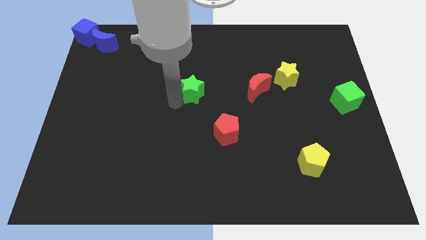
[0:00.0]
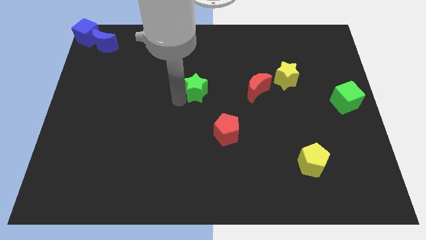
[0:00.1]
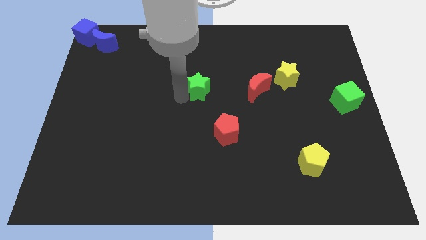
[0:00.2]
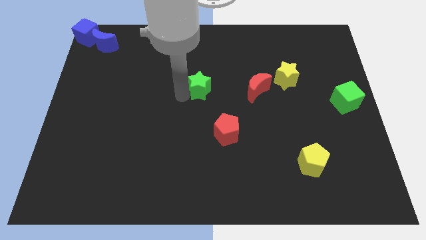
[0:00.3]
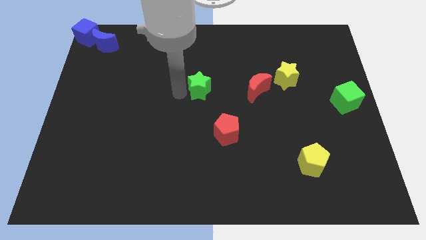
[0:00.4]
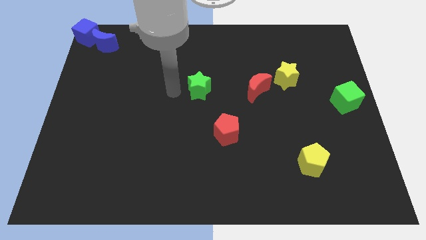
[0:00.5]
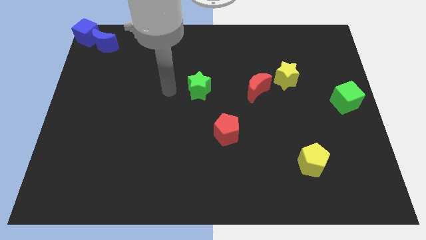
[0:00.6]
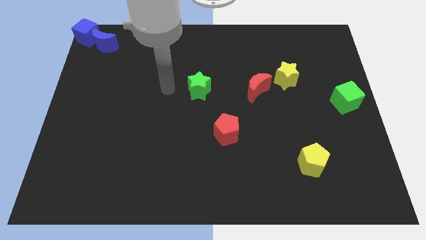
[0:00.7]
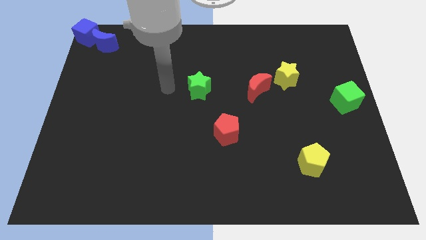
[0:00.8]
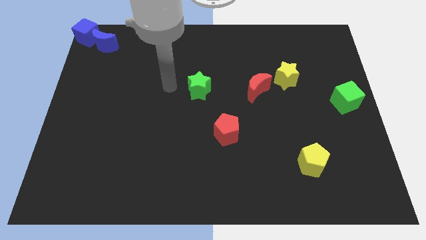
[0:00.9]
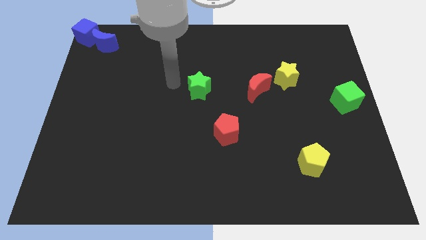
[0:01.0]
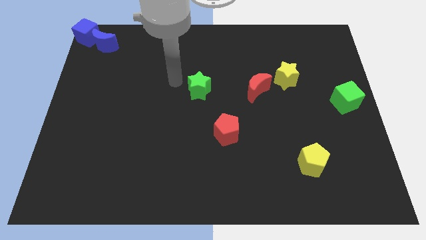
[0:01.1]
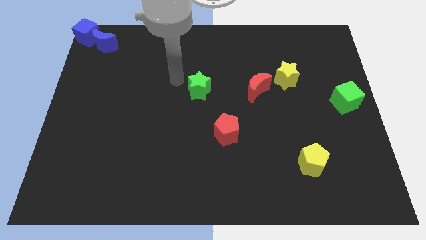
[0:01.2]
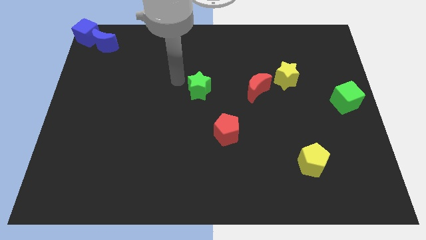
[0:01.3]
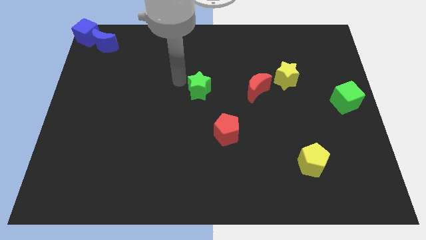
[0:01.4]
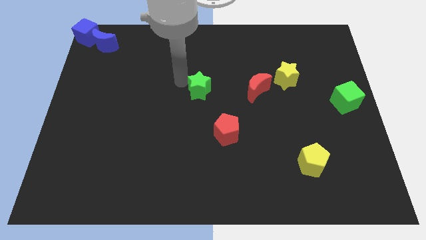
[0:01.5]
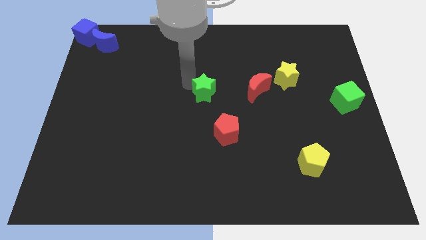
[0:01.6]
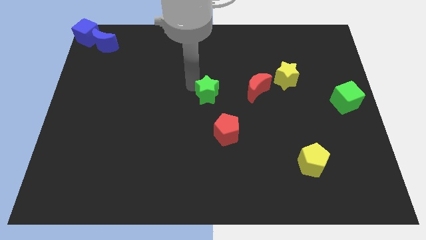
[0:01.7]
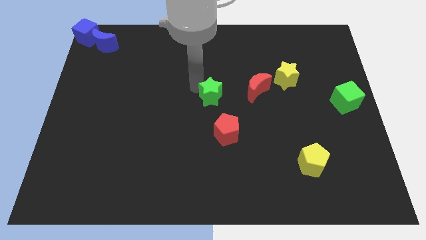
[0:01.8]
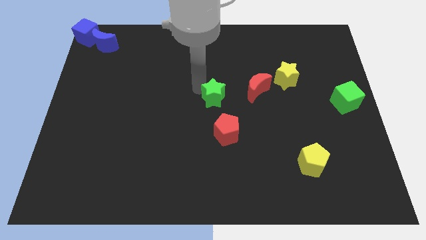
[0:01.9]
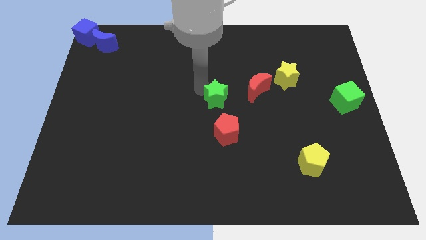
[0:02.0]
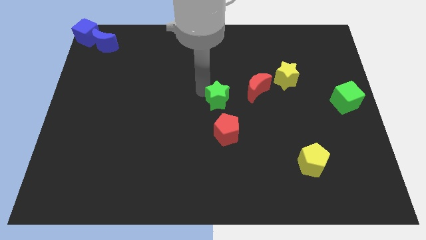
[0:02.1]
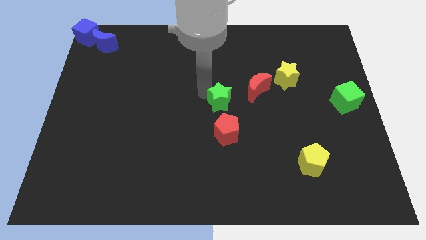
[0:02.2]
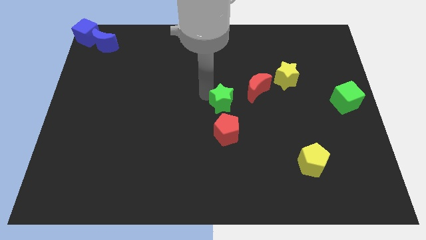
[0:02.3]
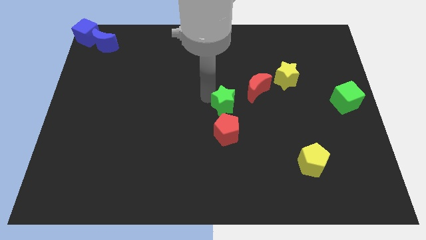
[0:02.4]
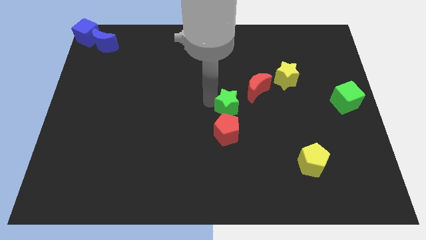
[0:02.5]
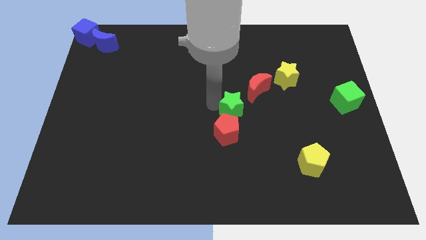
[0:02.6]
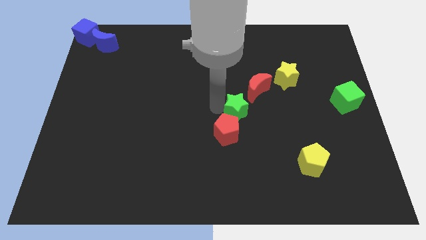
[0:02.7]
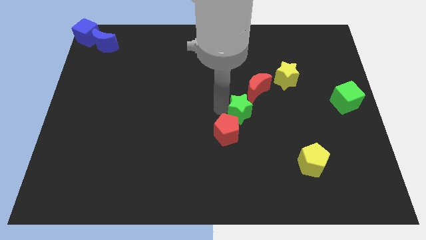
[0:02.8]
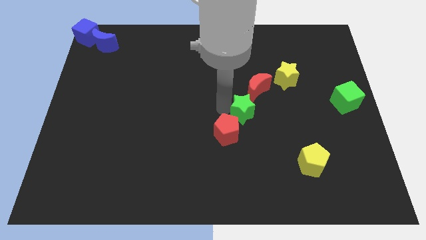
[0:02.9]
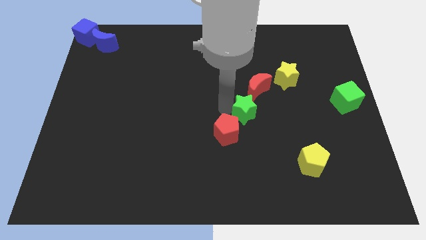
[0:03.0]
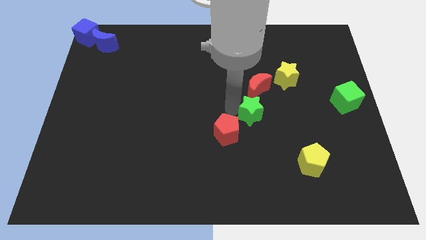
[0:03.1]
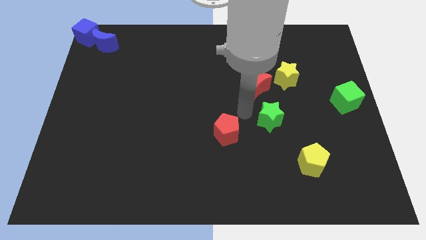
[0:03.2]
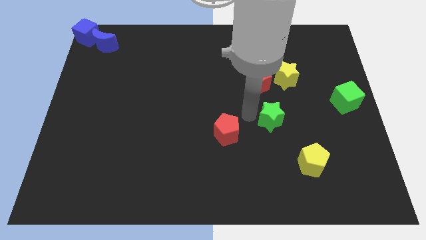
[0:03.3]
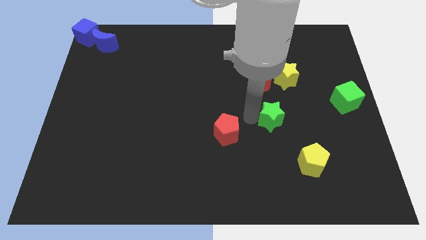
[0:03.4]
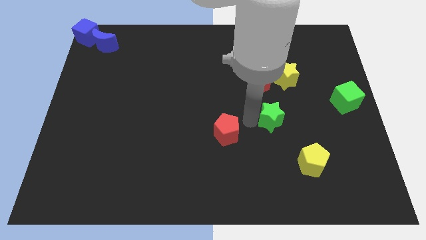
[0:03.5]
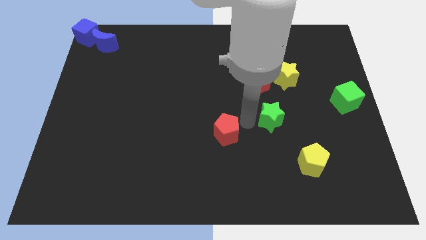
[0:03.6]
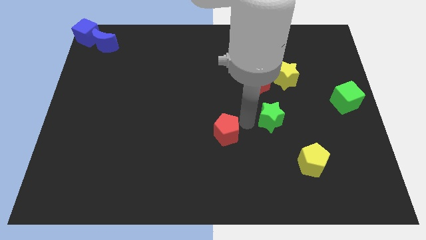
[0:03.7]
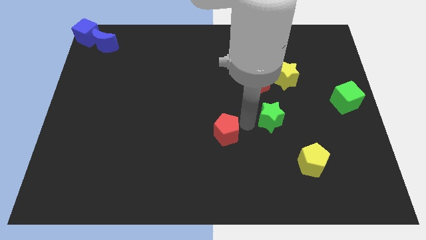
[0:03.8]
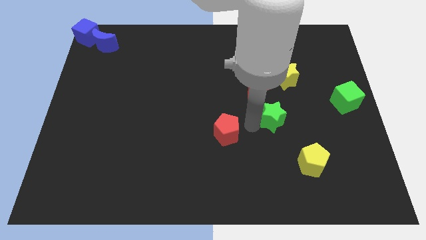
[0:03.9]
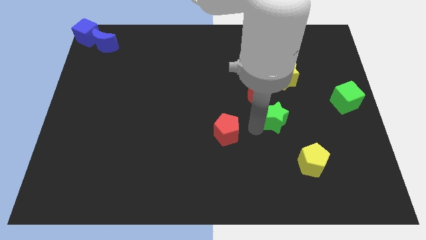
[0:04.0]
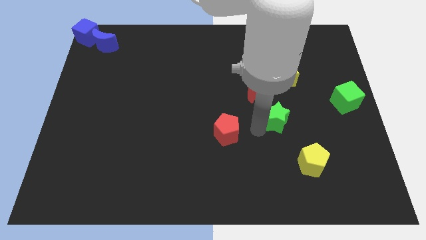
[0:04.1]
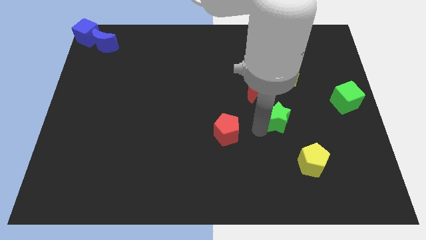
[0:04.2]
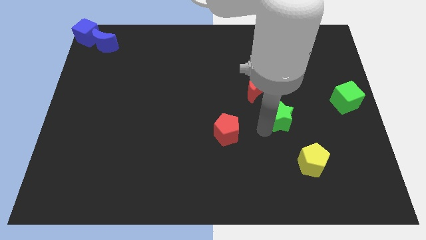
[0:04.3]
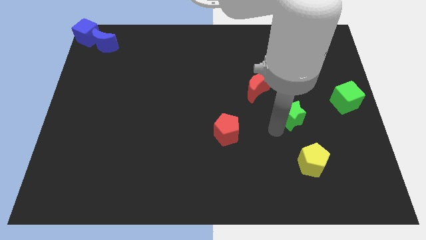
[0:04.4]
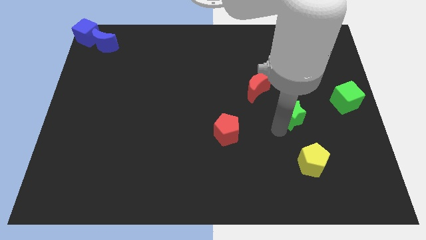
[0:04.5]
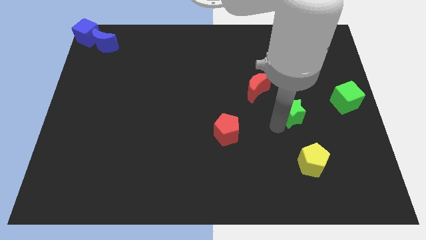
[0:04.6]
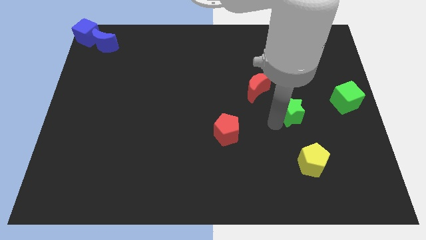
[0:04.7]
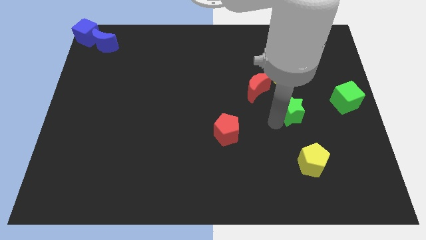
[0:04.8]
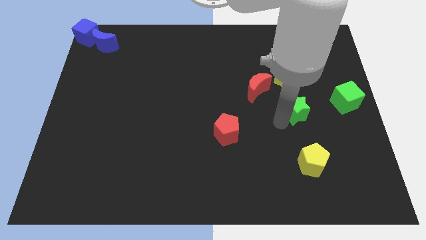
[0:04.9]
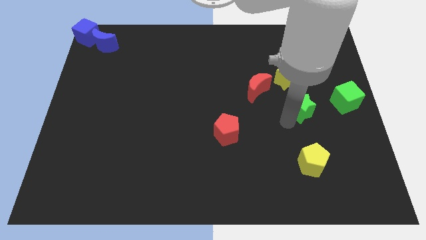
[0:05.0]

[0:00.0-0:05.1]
drag green star below the yellow star

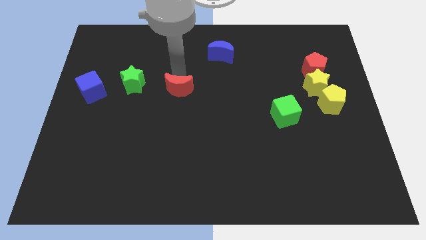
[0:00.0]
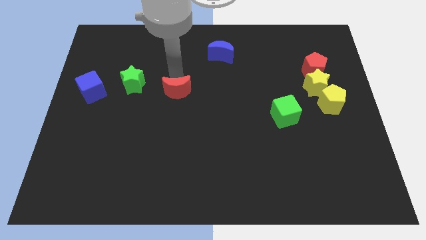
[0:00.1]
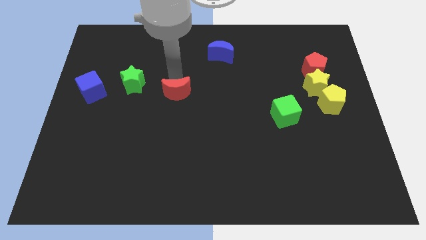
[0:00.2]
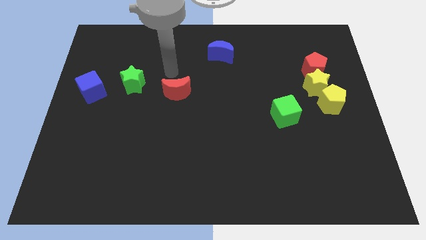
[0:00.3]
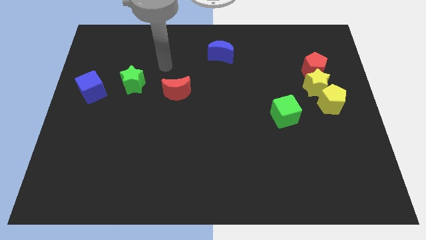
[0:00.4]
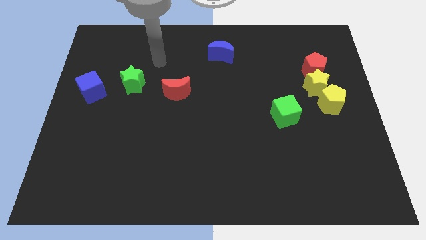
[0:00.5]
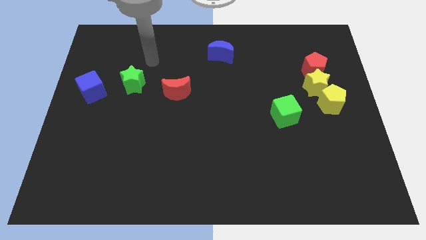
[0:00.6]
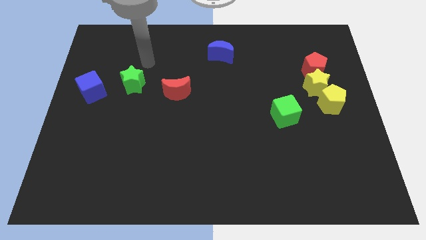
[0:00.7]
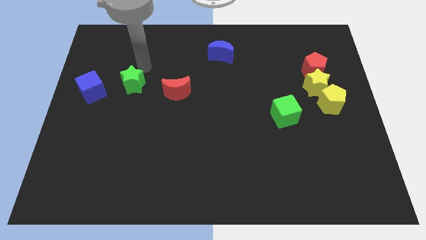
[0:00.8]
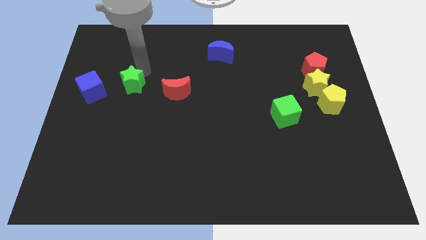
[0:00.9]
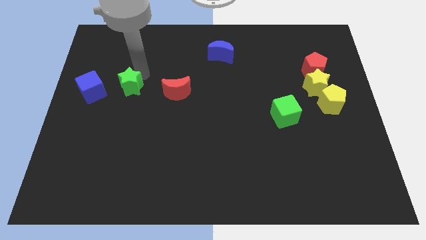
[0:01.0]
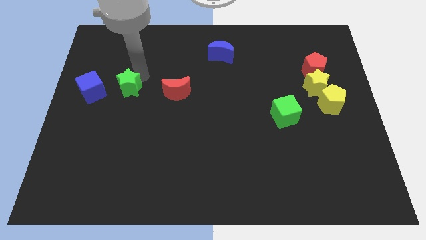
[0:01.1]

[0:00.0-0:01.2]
move your arm at the top of the green star

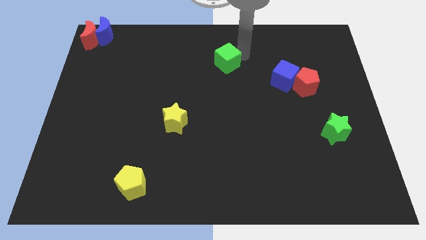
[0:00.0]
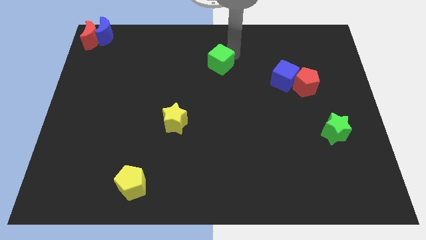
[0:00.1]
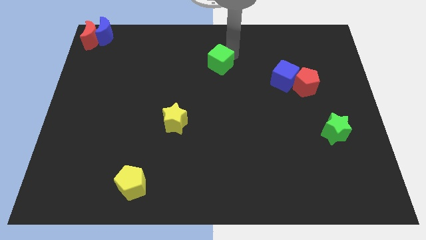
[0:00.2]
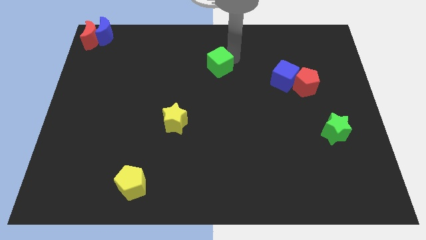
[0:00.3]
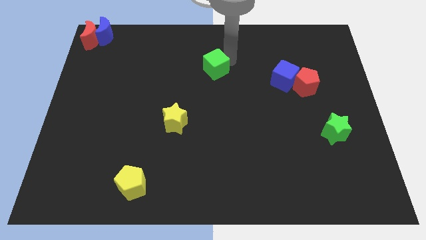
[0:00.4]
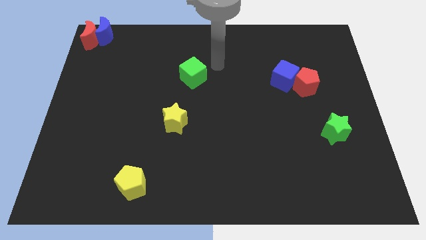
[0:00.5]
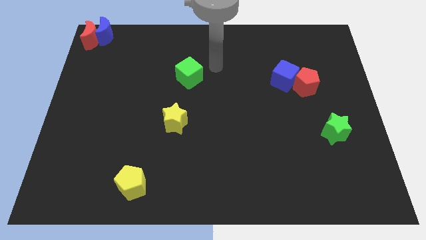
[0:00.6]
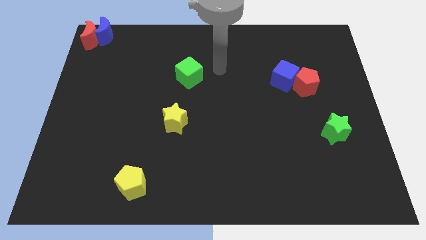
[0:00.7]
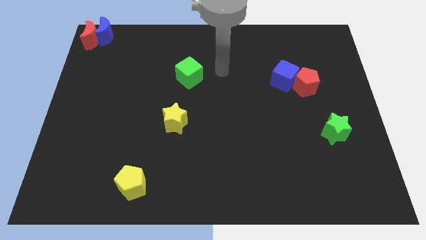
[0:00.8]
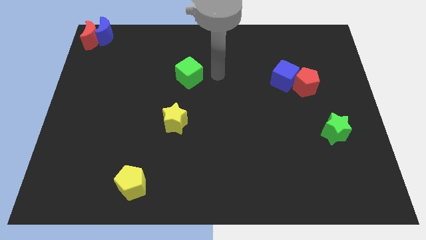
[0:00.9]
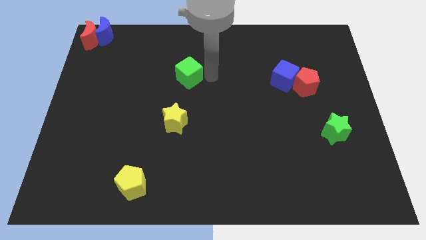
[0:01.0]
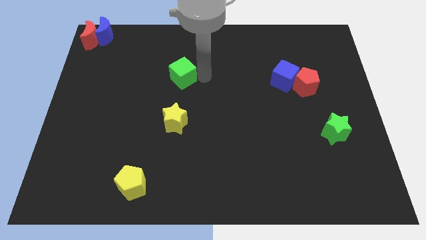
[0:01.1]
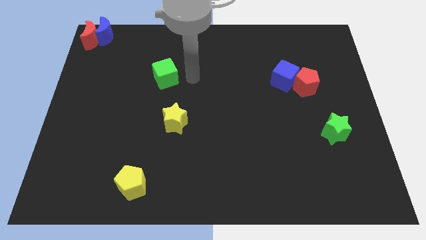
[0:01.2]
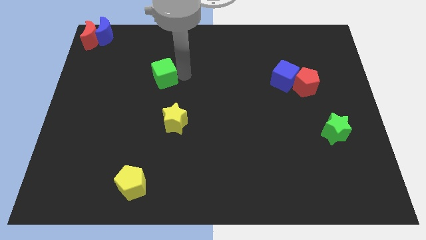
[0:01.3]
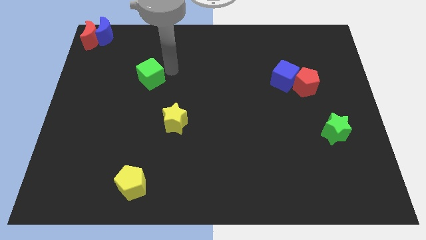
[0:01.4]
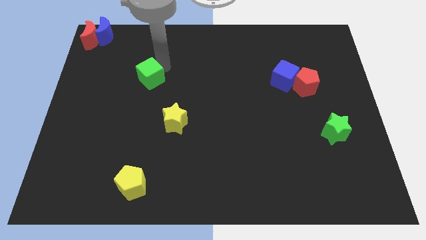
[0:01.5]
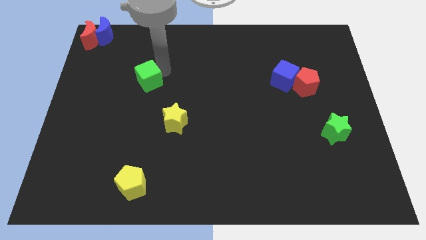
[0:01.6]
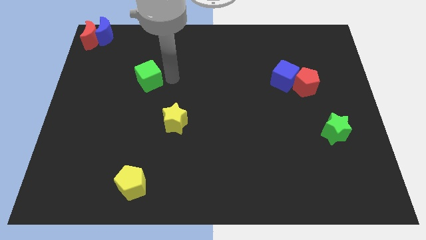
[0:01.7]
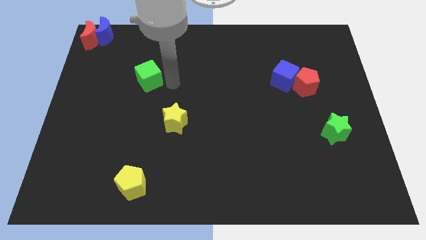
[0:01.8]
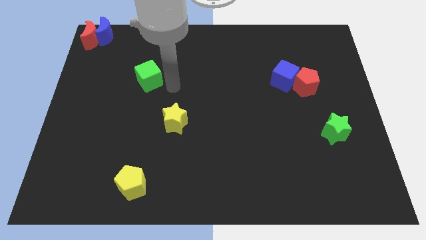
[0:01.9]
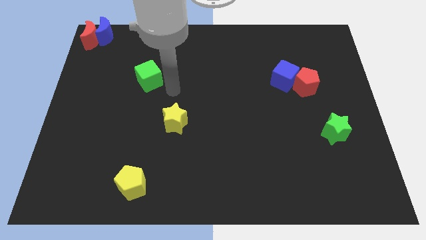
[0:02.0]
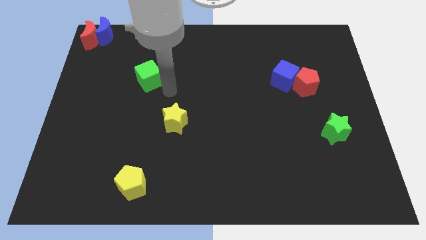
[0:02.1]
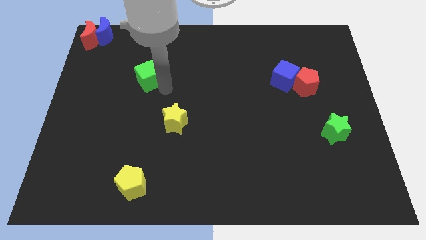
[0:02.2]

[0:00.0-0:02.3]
drag the green cube to the top left of the yellow star

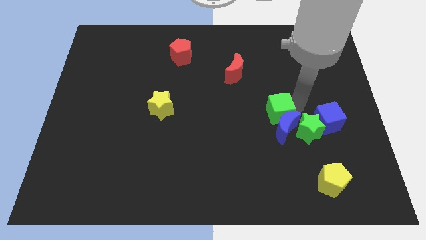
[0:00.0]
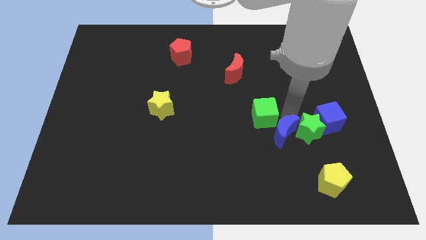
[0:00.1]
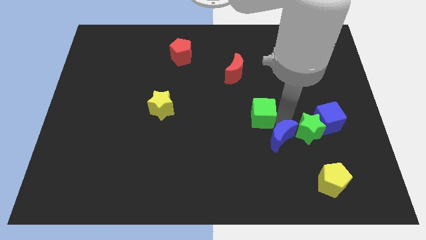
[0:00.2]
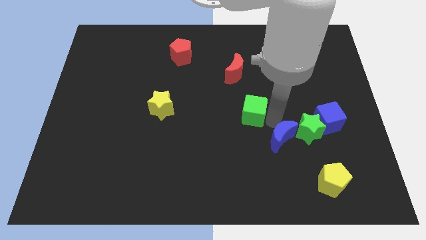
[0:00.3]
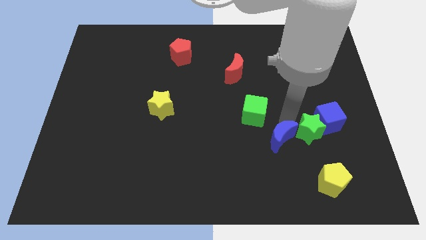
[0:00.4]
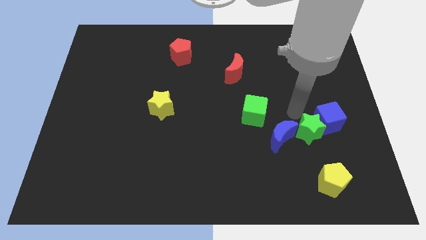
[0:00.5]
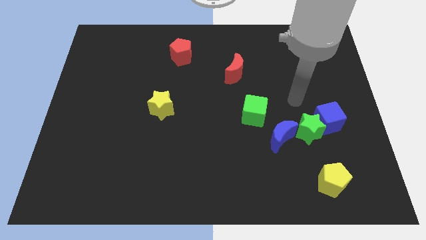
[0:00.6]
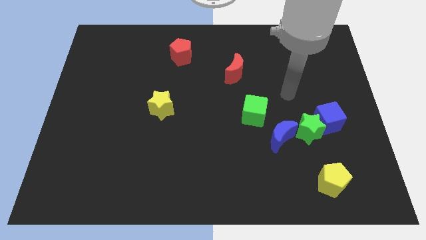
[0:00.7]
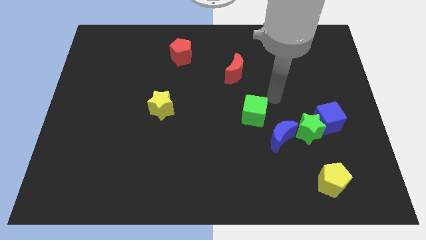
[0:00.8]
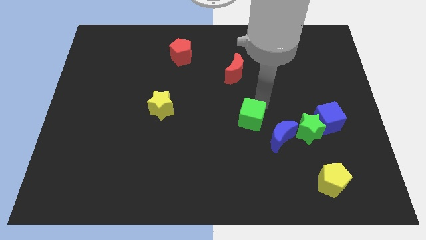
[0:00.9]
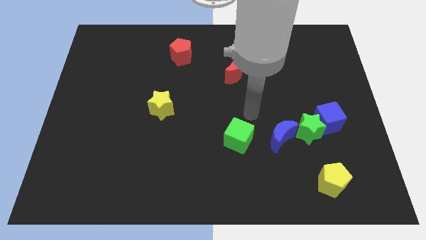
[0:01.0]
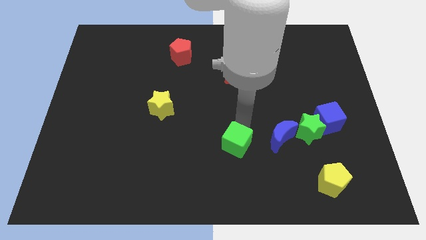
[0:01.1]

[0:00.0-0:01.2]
place green cube to the left of blue crescent
